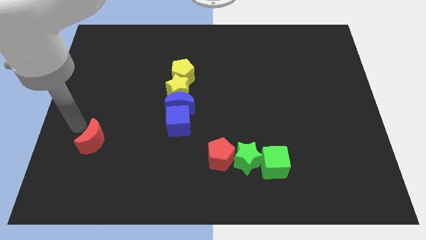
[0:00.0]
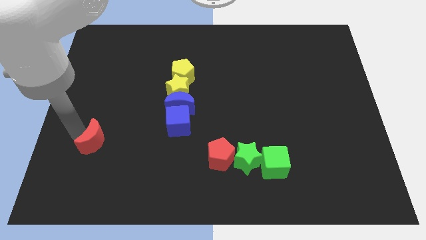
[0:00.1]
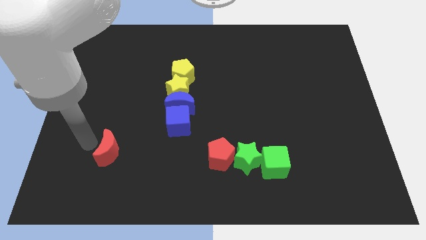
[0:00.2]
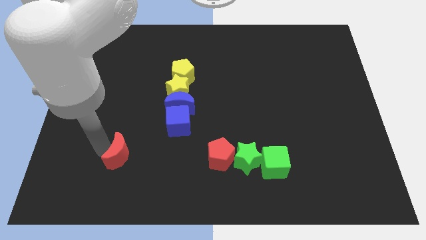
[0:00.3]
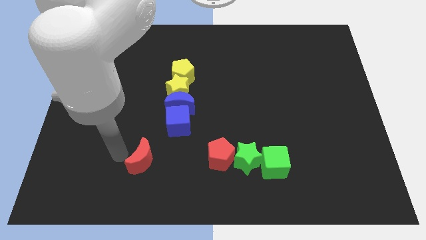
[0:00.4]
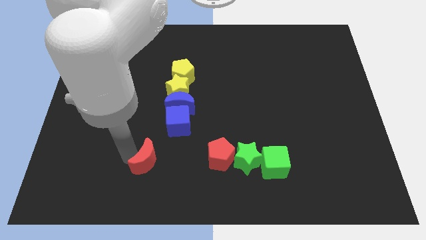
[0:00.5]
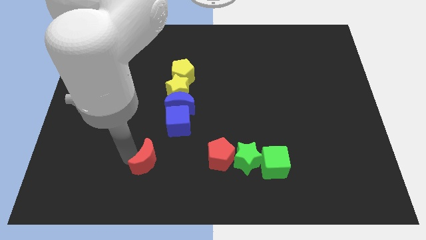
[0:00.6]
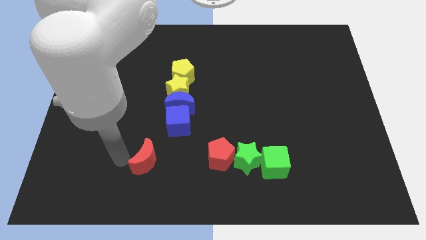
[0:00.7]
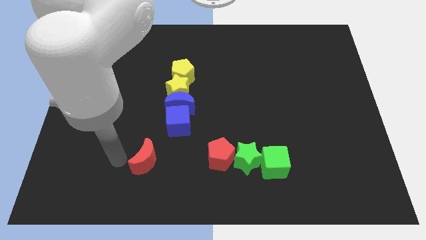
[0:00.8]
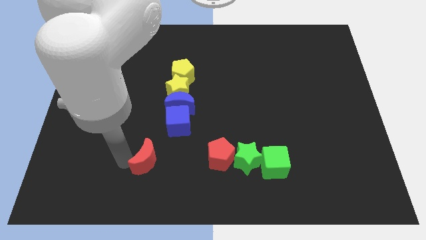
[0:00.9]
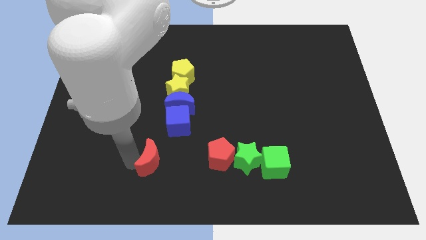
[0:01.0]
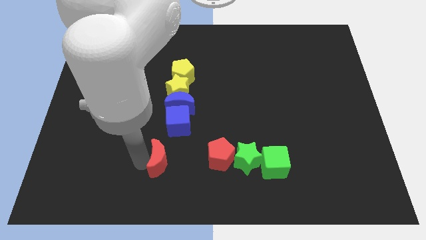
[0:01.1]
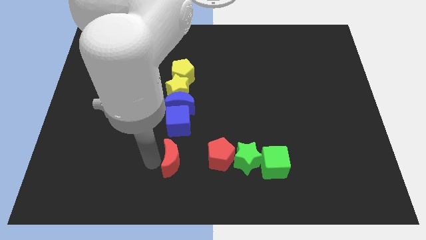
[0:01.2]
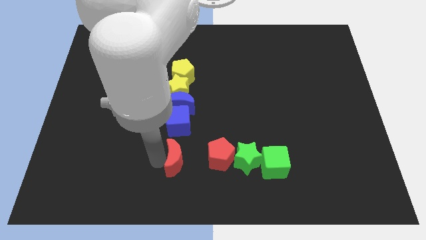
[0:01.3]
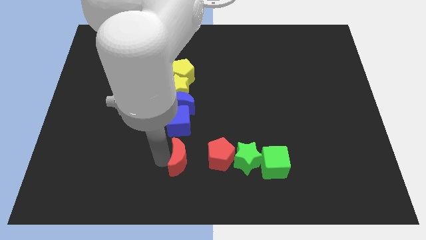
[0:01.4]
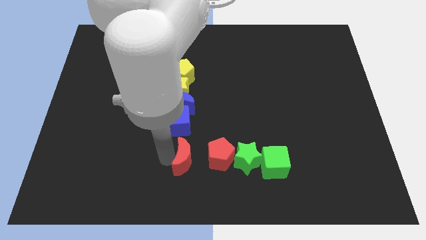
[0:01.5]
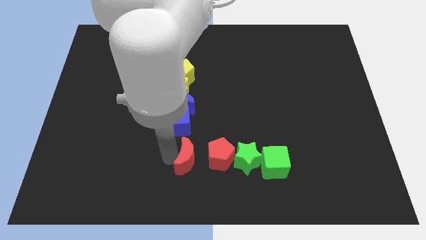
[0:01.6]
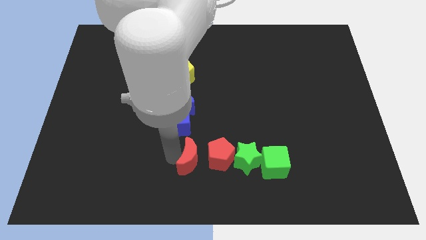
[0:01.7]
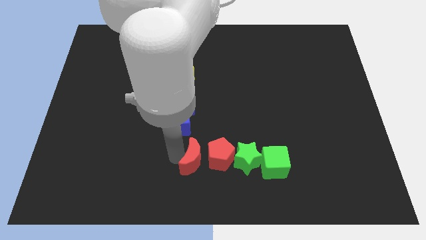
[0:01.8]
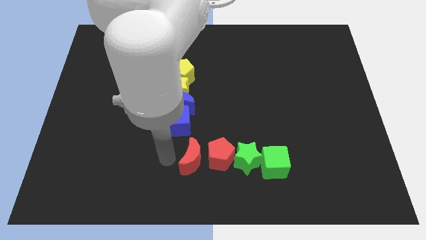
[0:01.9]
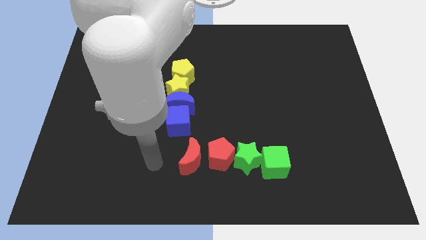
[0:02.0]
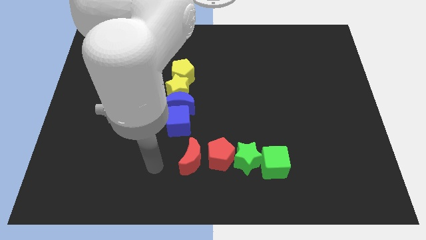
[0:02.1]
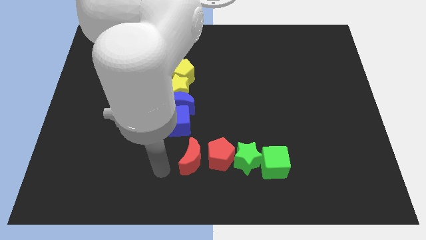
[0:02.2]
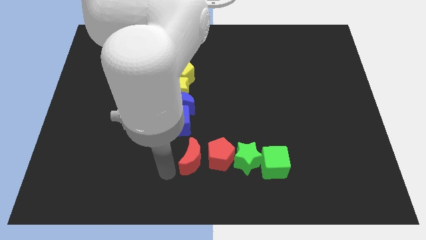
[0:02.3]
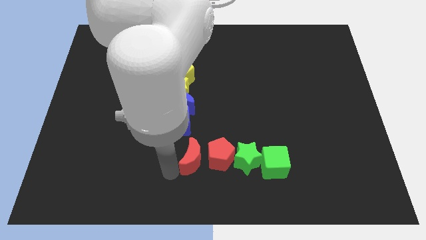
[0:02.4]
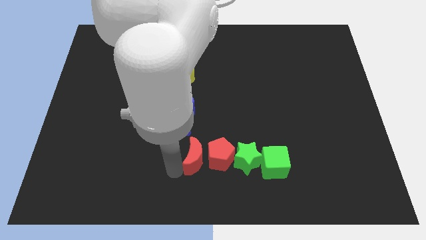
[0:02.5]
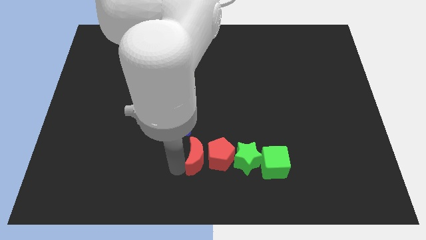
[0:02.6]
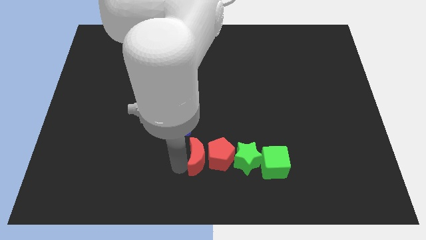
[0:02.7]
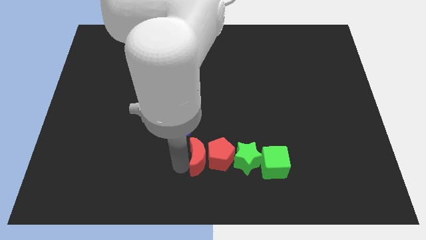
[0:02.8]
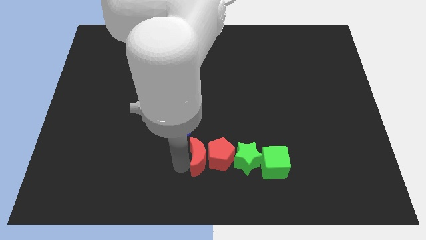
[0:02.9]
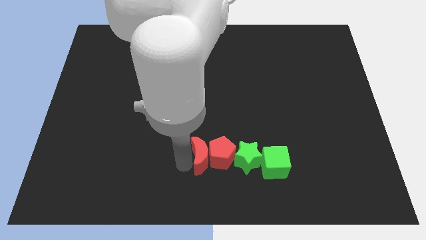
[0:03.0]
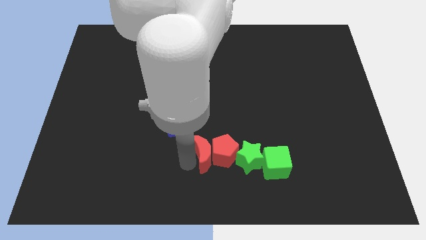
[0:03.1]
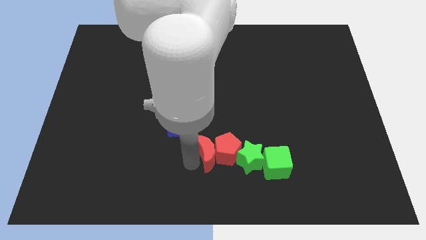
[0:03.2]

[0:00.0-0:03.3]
push red moon into red pentagon

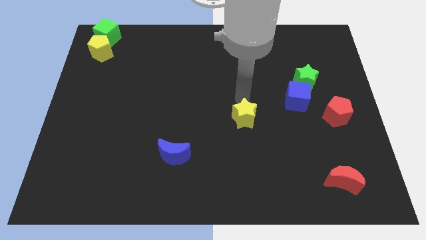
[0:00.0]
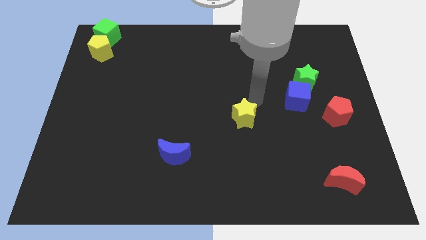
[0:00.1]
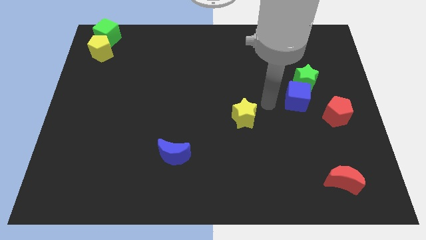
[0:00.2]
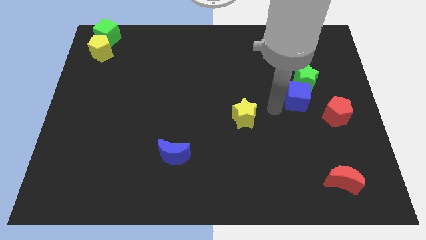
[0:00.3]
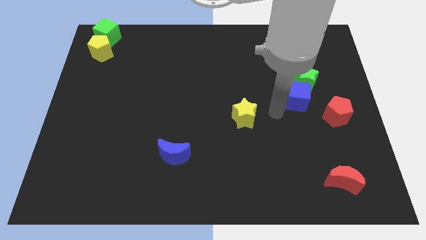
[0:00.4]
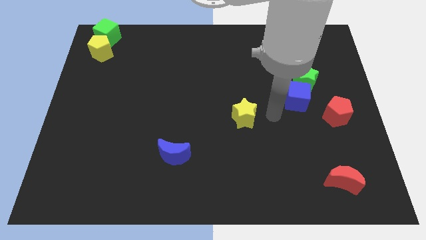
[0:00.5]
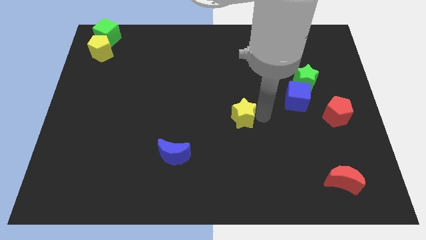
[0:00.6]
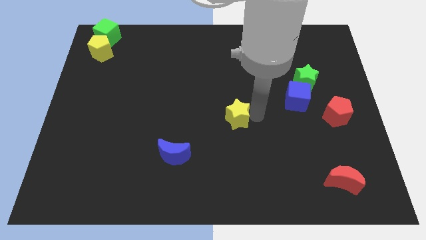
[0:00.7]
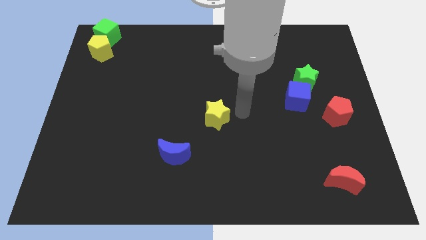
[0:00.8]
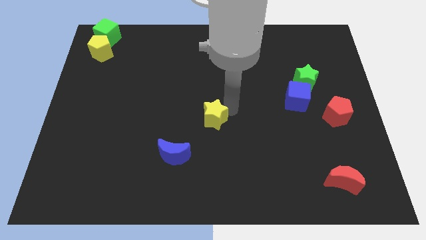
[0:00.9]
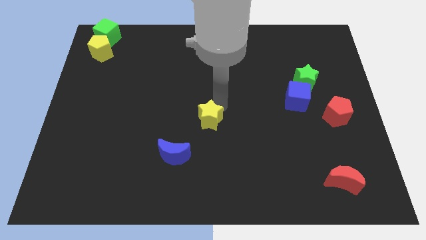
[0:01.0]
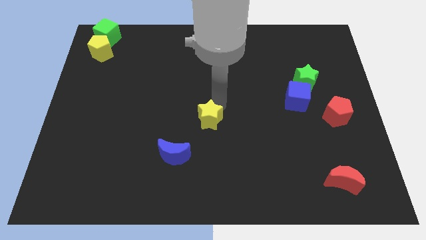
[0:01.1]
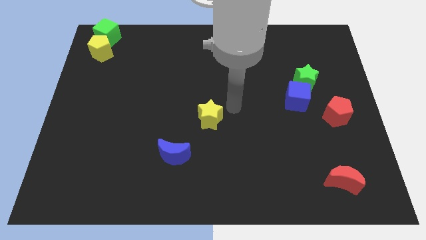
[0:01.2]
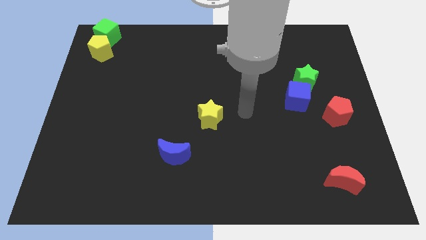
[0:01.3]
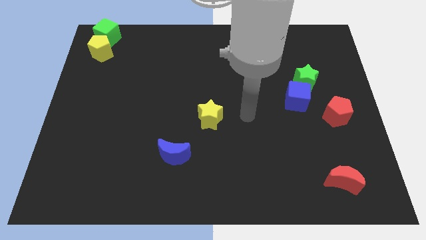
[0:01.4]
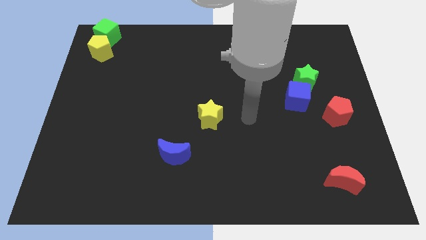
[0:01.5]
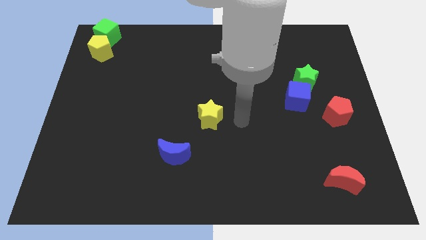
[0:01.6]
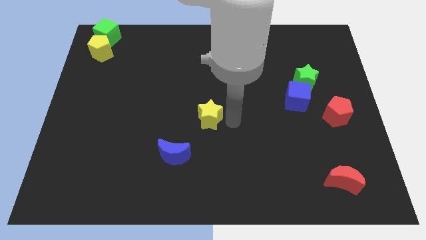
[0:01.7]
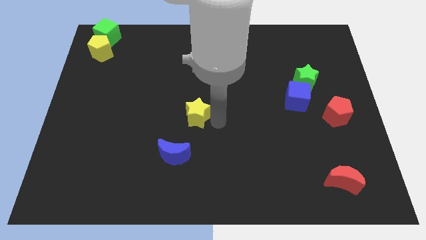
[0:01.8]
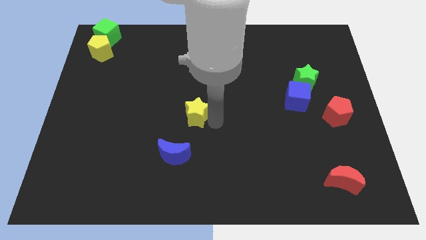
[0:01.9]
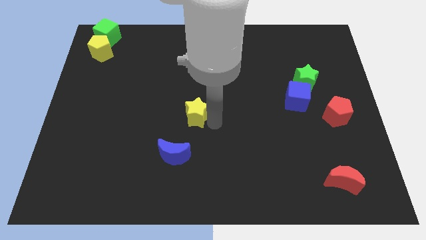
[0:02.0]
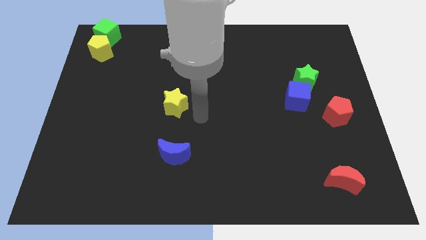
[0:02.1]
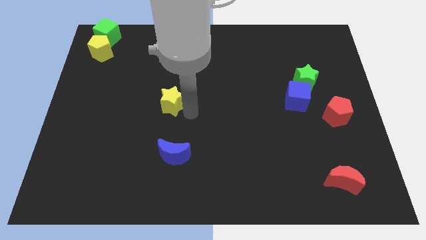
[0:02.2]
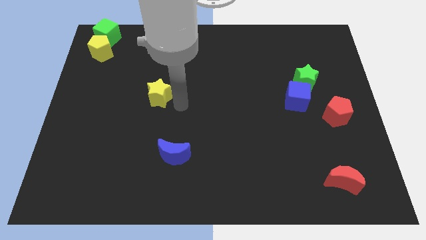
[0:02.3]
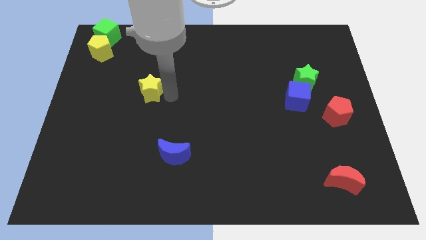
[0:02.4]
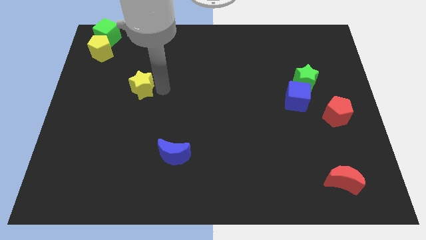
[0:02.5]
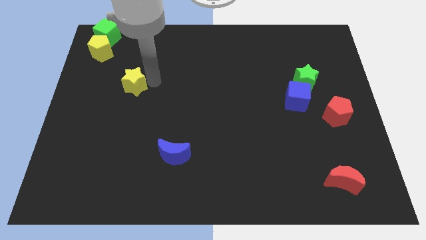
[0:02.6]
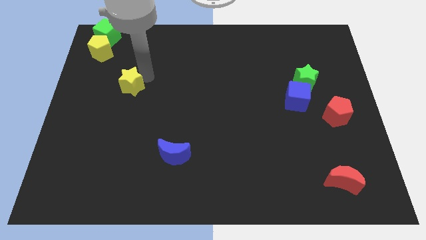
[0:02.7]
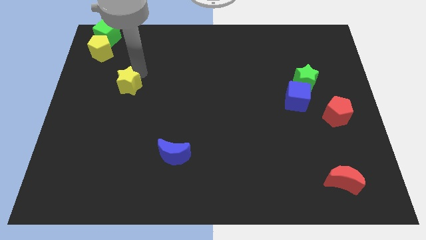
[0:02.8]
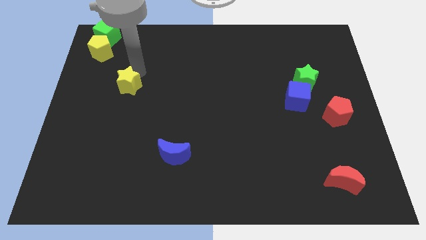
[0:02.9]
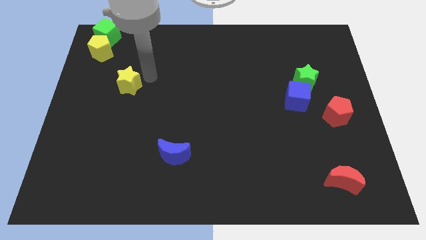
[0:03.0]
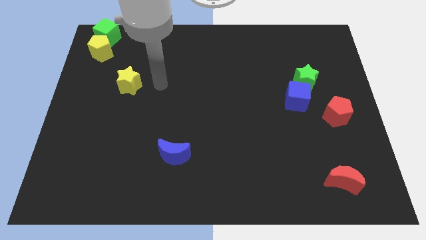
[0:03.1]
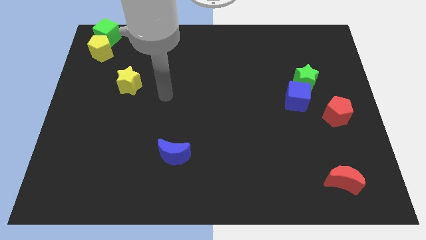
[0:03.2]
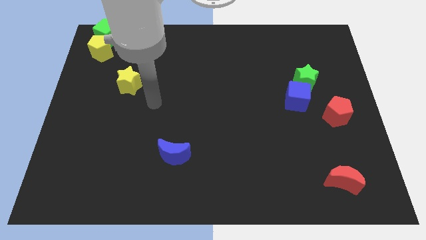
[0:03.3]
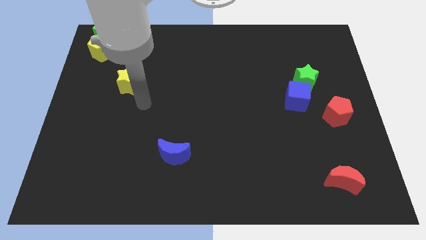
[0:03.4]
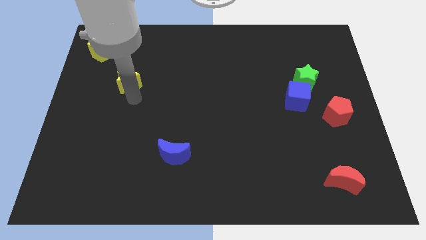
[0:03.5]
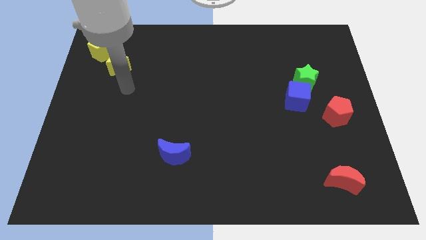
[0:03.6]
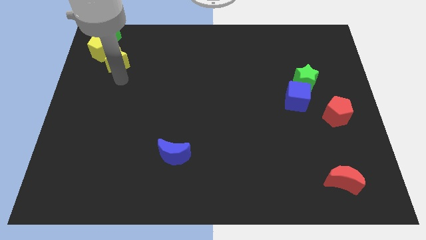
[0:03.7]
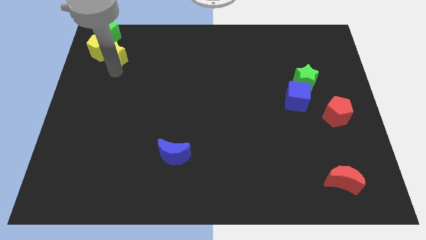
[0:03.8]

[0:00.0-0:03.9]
move the yellow star into the yellow pentagon

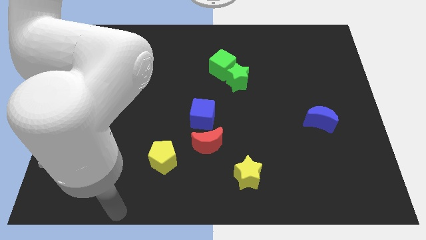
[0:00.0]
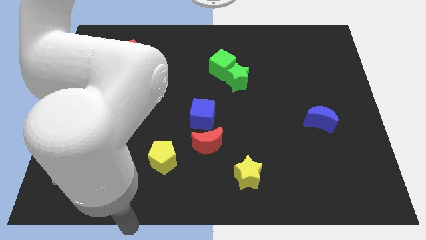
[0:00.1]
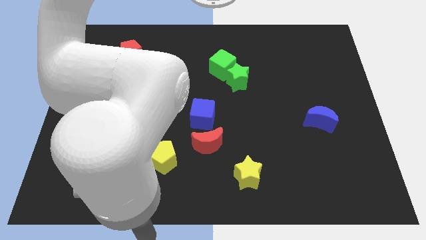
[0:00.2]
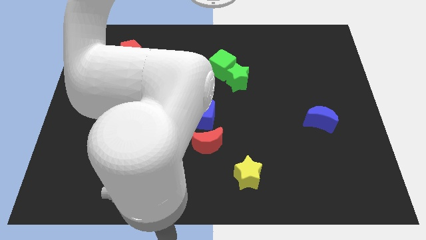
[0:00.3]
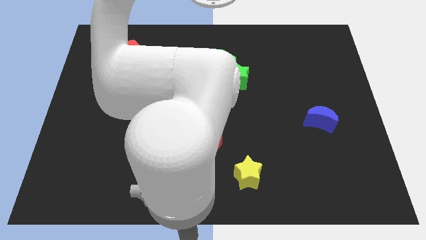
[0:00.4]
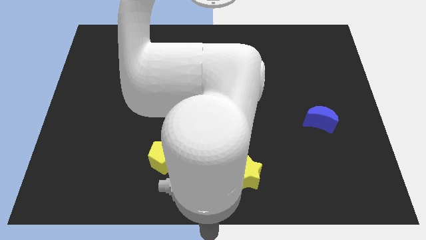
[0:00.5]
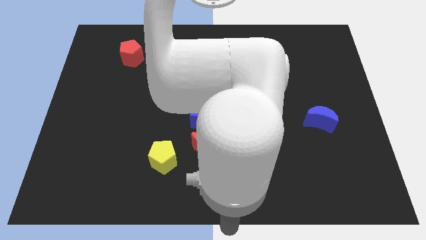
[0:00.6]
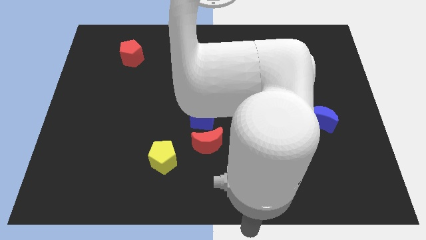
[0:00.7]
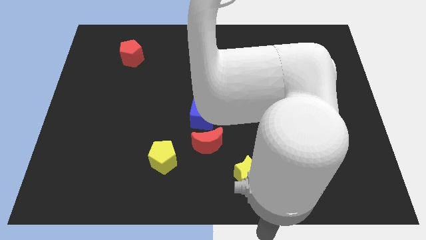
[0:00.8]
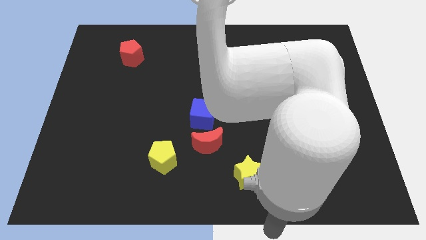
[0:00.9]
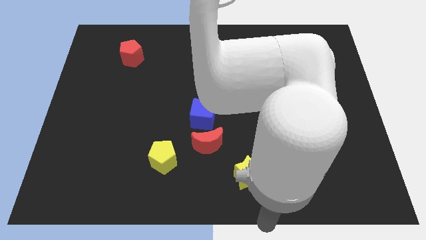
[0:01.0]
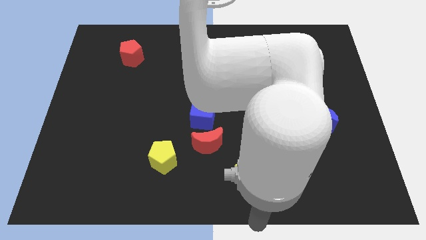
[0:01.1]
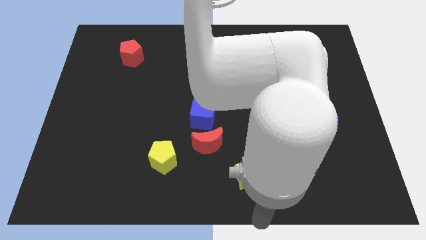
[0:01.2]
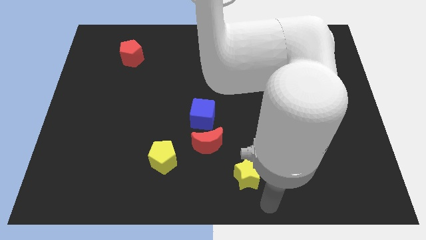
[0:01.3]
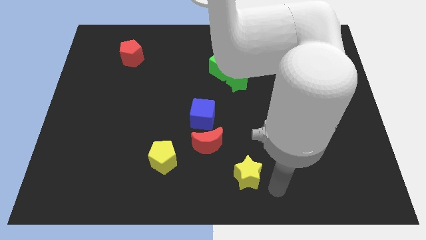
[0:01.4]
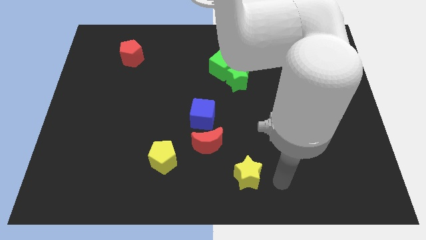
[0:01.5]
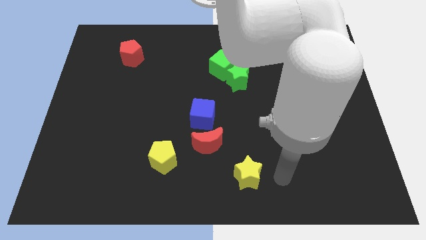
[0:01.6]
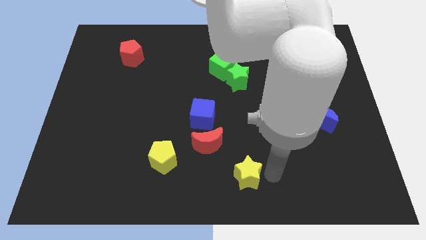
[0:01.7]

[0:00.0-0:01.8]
move your arm to the right of the yellow star
